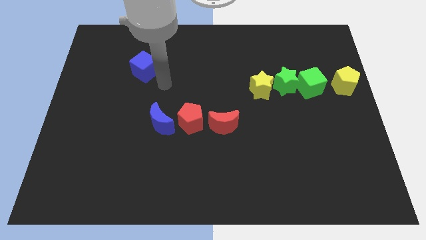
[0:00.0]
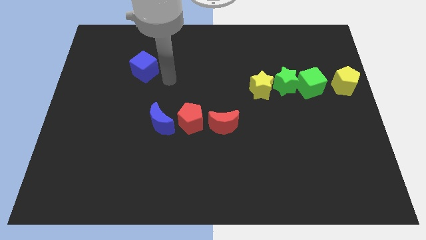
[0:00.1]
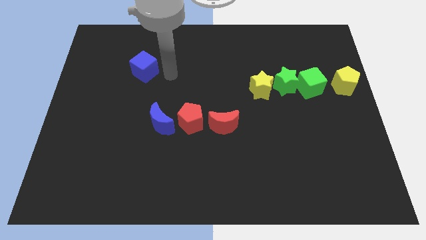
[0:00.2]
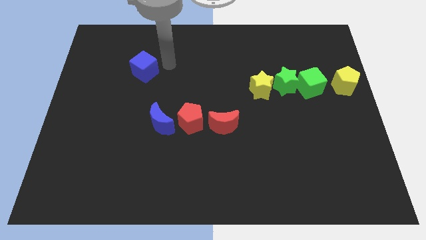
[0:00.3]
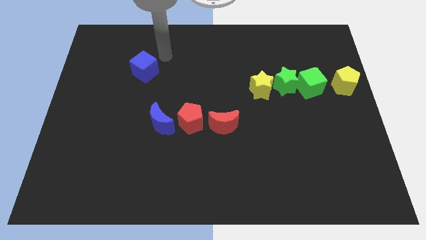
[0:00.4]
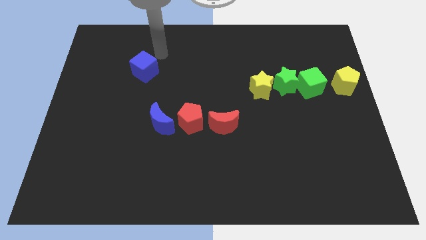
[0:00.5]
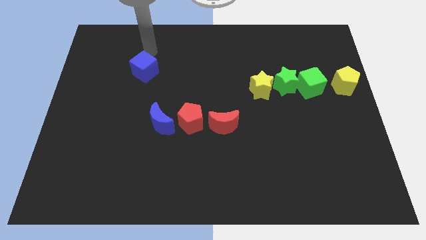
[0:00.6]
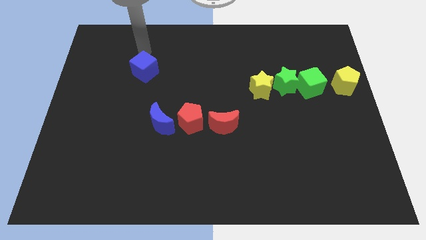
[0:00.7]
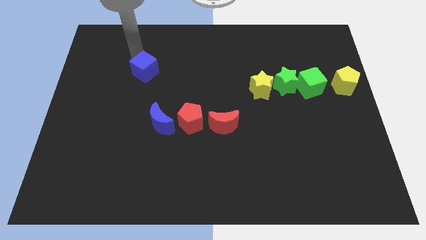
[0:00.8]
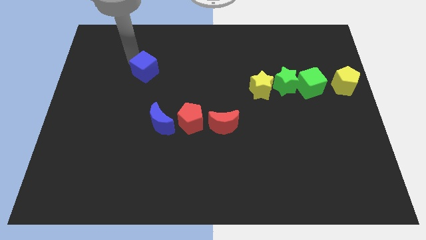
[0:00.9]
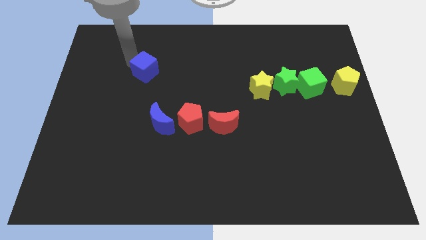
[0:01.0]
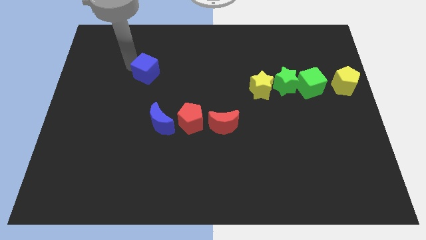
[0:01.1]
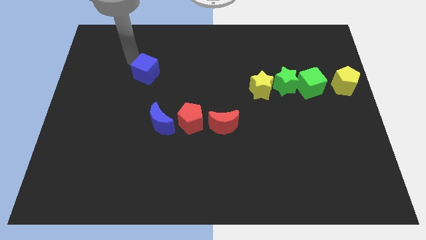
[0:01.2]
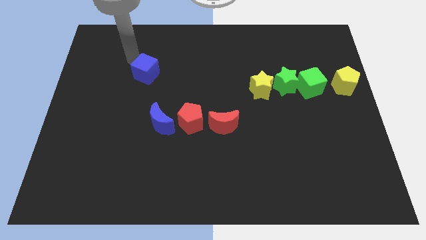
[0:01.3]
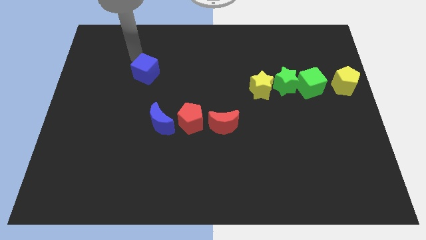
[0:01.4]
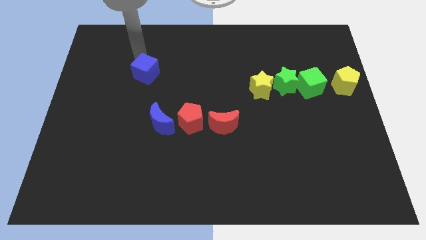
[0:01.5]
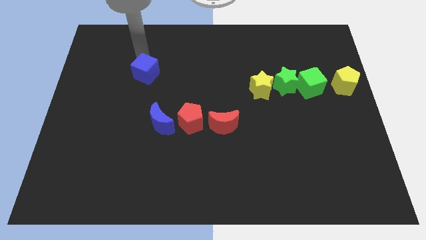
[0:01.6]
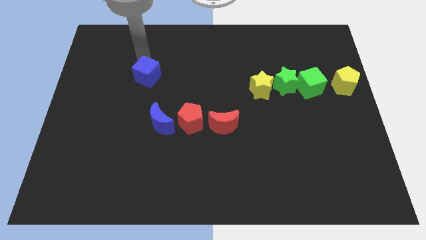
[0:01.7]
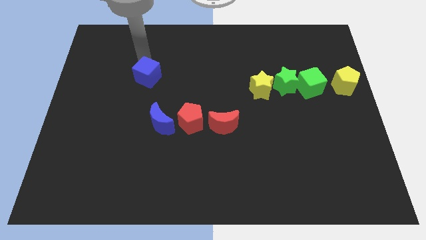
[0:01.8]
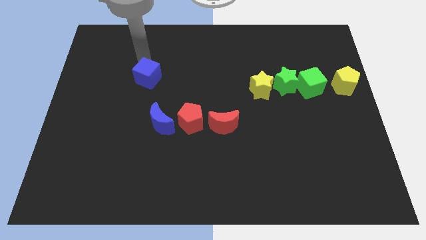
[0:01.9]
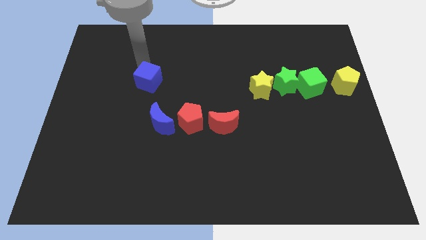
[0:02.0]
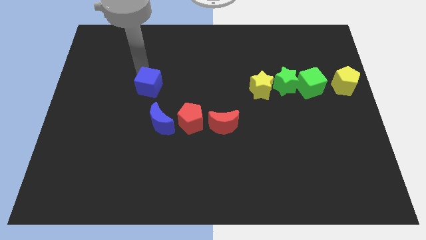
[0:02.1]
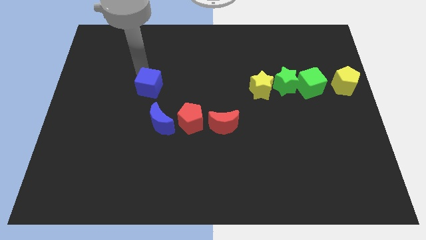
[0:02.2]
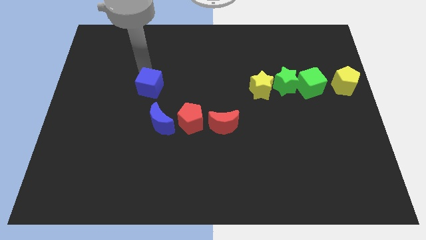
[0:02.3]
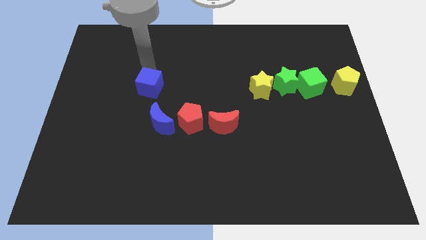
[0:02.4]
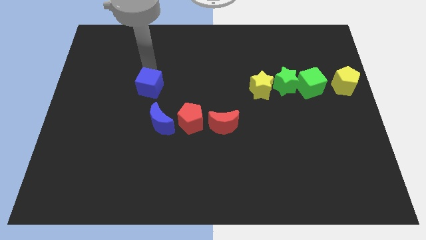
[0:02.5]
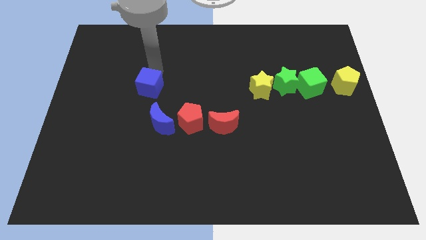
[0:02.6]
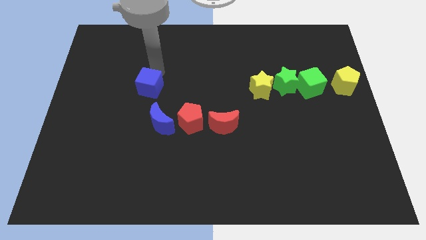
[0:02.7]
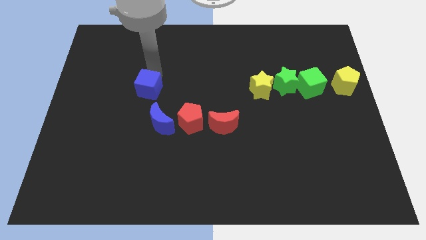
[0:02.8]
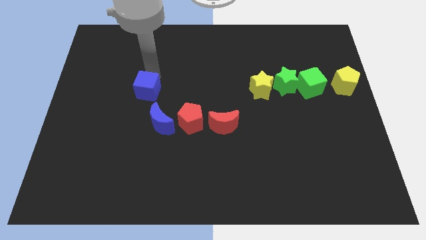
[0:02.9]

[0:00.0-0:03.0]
drag blue cube above blue moon

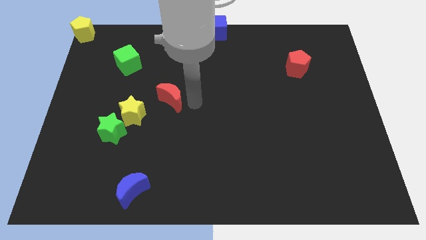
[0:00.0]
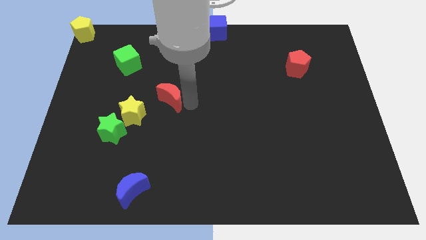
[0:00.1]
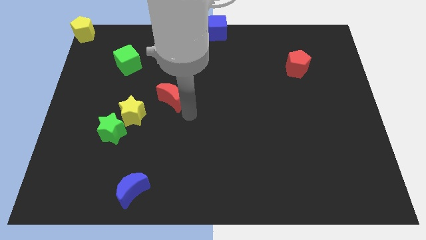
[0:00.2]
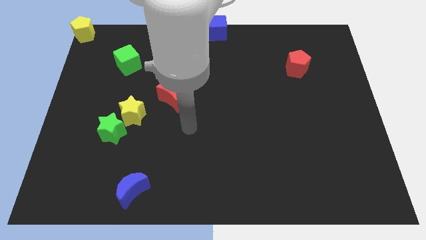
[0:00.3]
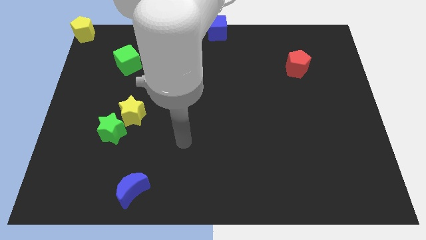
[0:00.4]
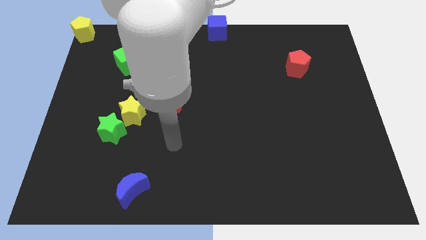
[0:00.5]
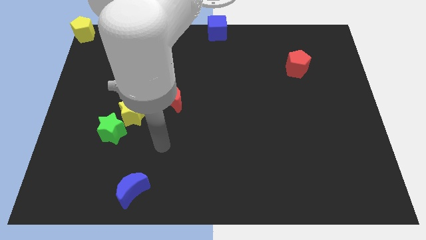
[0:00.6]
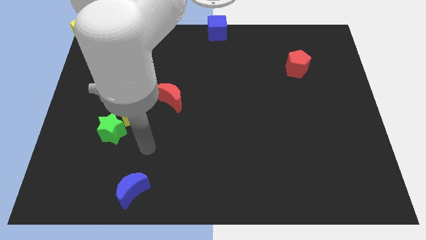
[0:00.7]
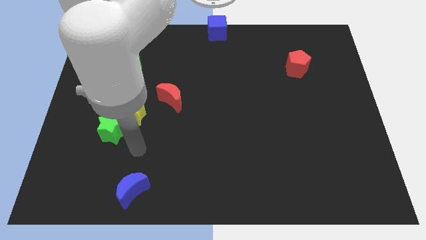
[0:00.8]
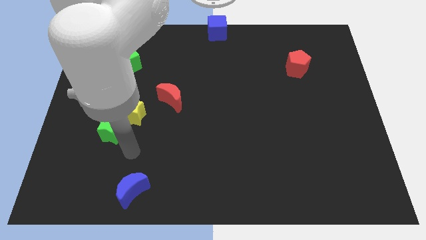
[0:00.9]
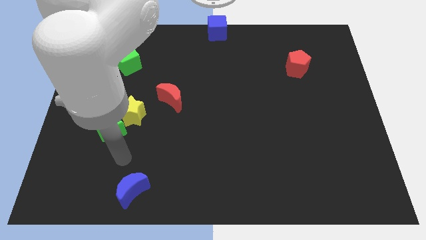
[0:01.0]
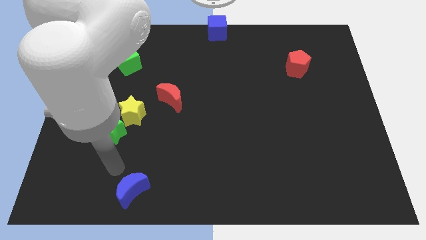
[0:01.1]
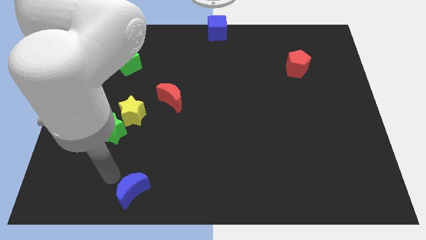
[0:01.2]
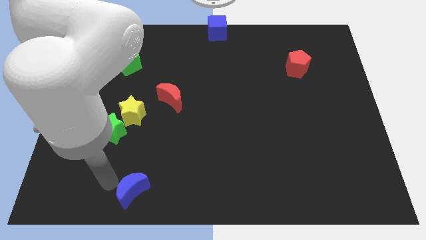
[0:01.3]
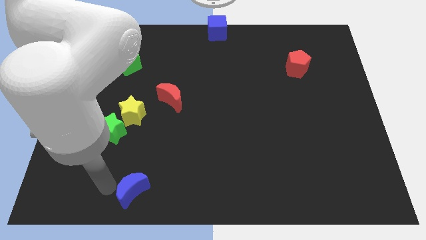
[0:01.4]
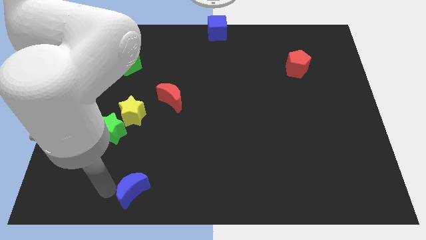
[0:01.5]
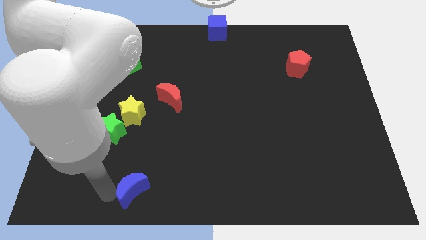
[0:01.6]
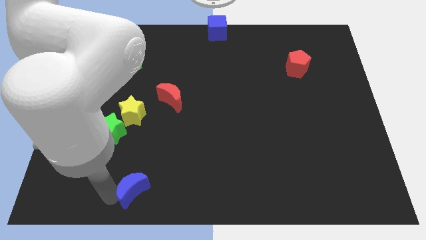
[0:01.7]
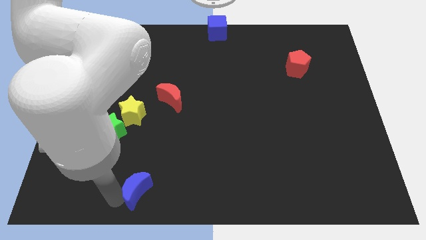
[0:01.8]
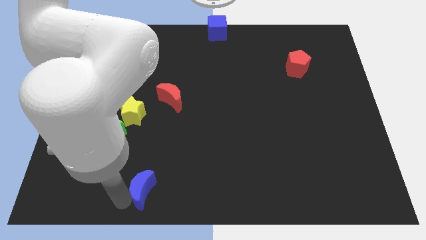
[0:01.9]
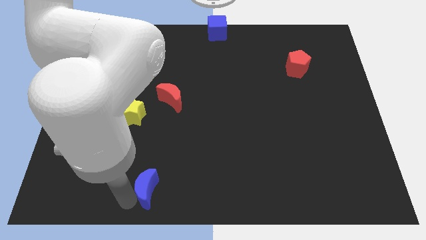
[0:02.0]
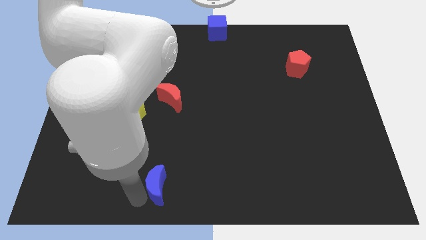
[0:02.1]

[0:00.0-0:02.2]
push the blue moon slightly to the right

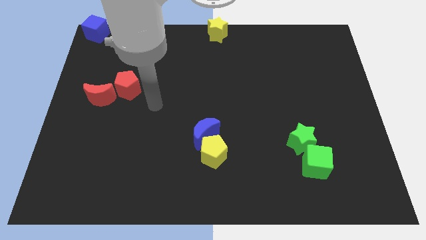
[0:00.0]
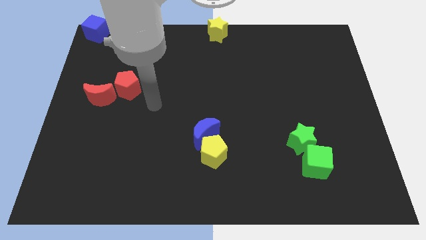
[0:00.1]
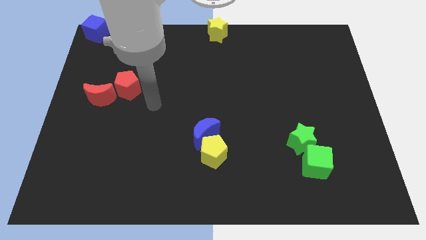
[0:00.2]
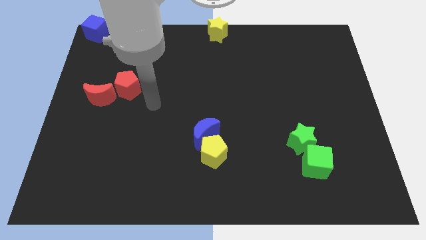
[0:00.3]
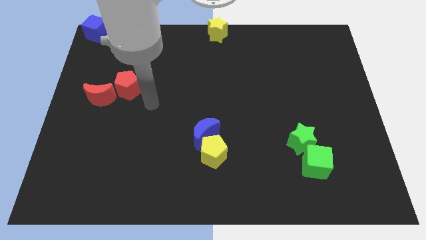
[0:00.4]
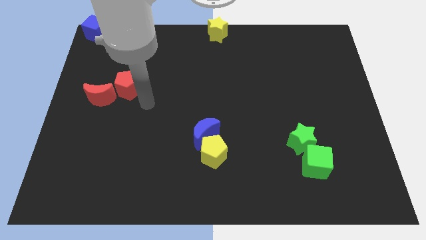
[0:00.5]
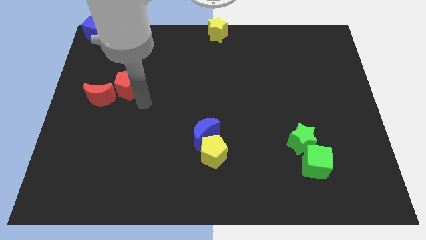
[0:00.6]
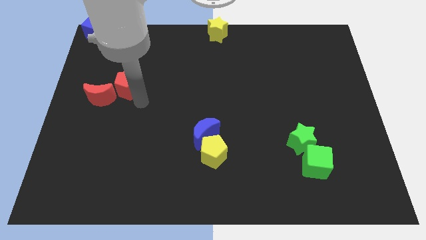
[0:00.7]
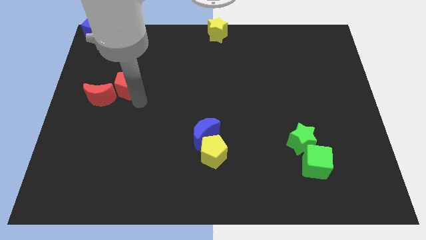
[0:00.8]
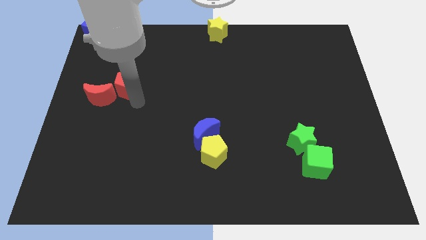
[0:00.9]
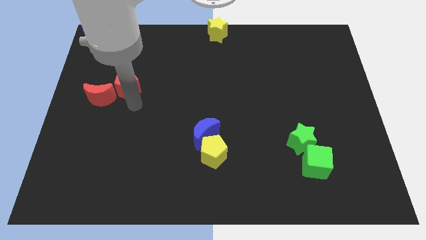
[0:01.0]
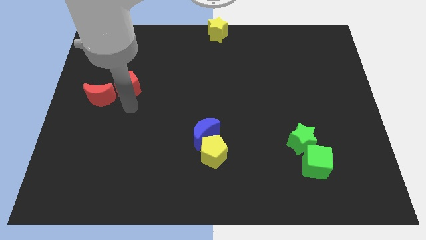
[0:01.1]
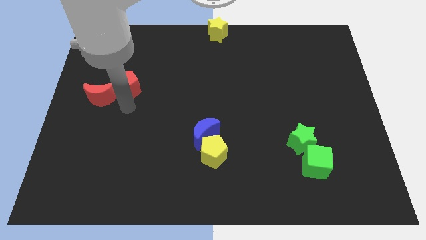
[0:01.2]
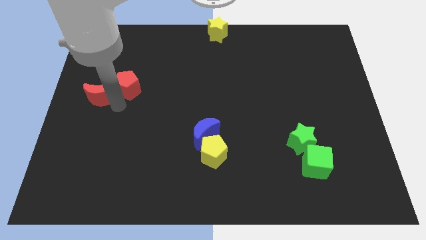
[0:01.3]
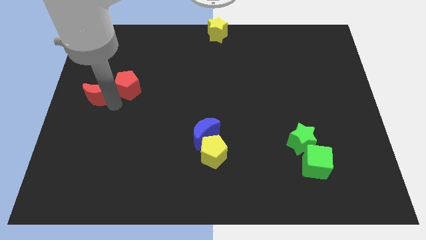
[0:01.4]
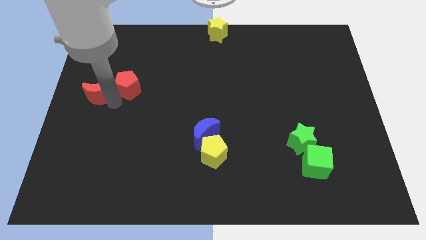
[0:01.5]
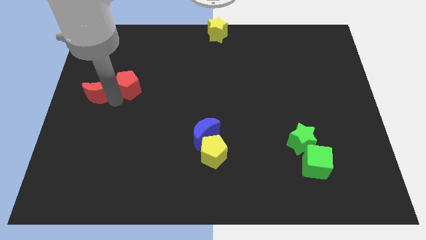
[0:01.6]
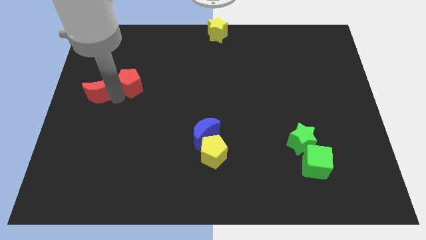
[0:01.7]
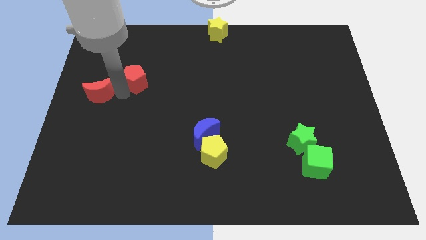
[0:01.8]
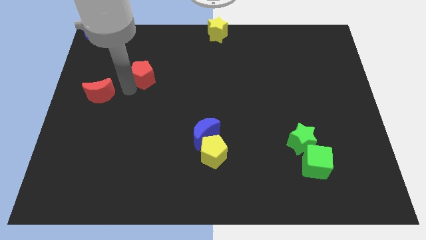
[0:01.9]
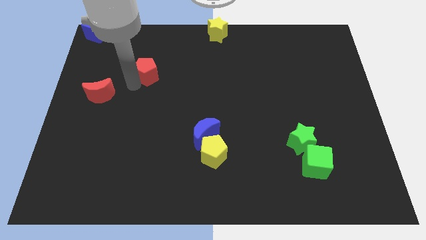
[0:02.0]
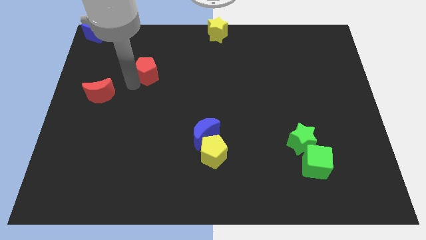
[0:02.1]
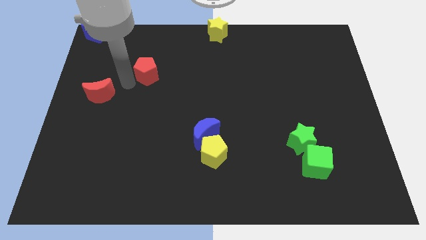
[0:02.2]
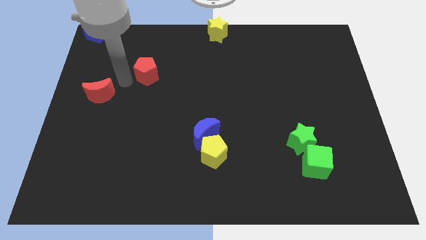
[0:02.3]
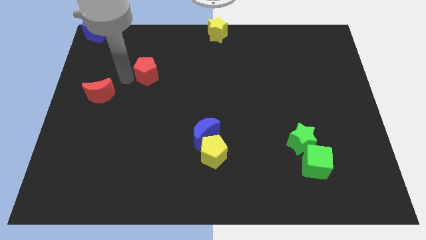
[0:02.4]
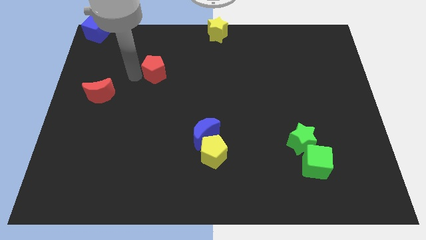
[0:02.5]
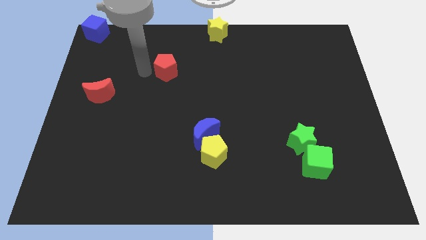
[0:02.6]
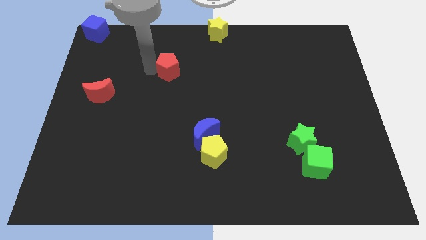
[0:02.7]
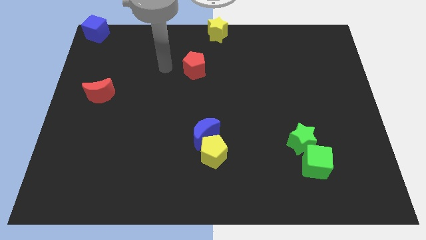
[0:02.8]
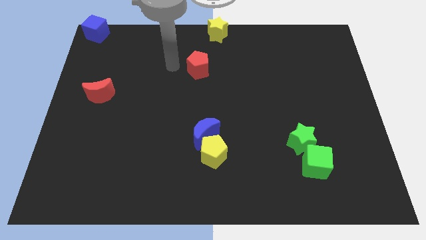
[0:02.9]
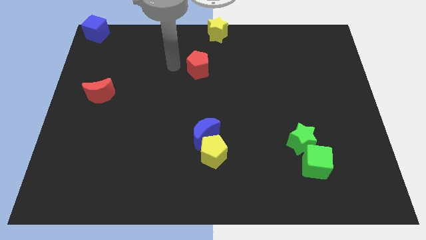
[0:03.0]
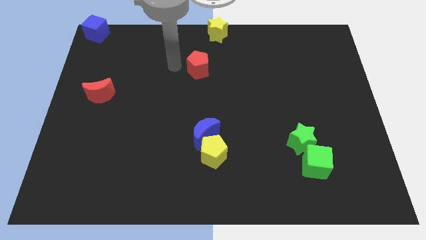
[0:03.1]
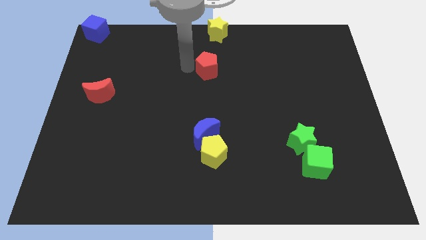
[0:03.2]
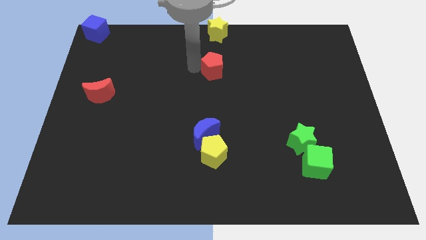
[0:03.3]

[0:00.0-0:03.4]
put the red pentagon below to the yellow star

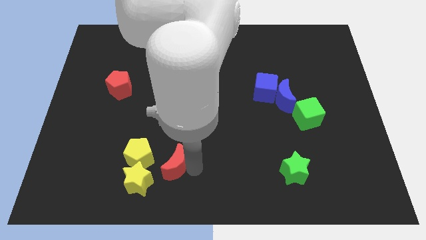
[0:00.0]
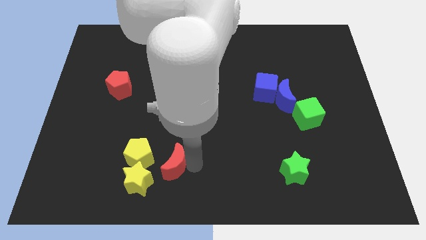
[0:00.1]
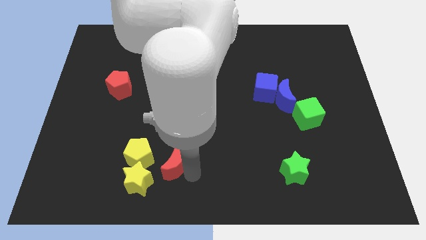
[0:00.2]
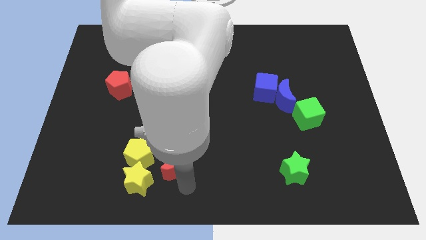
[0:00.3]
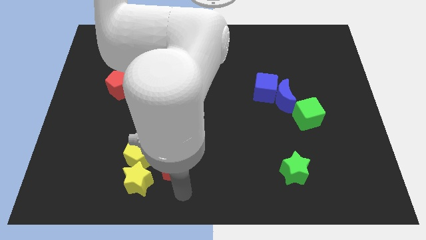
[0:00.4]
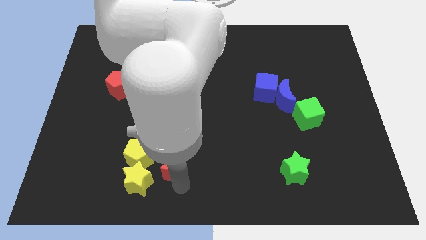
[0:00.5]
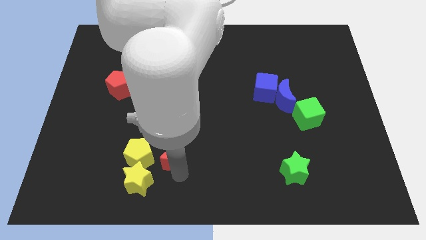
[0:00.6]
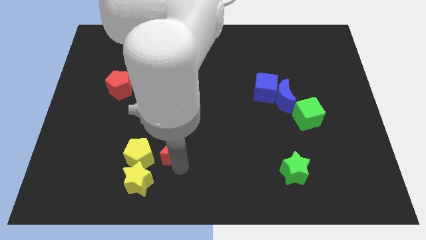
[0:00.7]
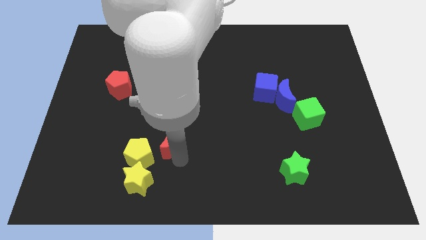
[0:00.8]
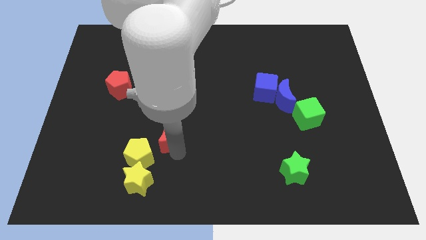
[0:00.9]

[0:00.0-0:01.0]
push red moon right to yellow pentagon
